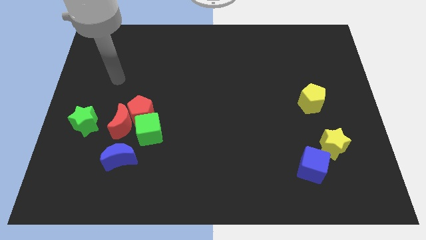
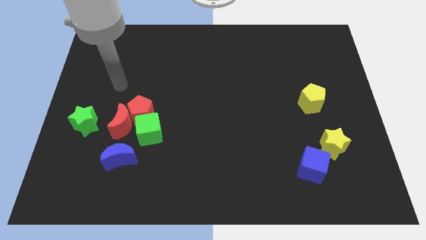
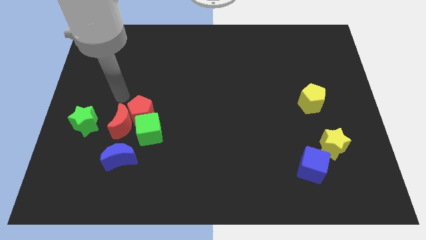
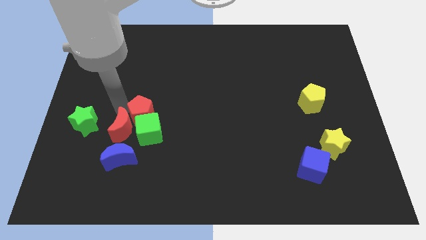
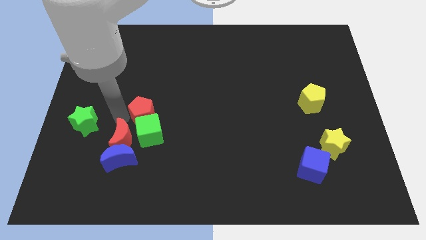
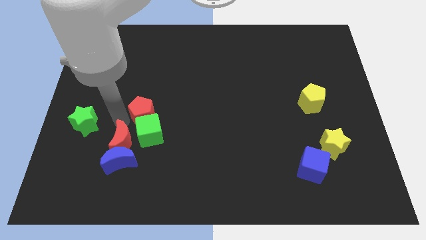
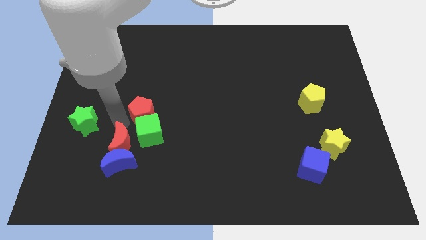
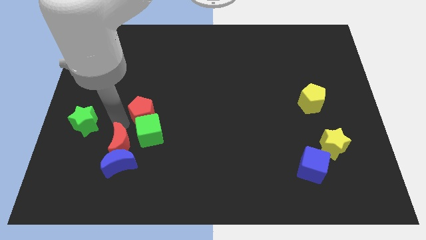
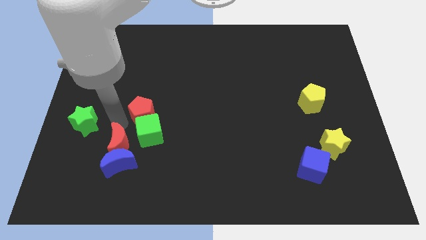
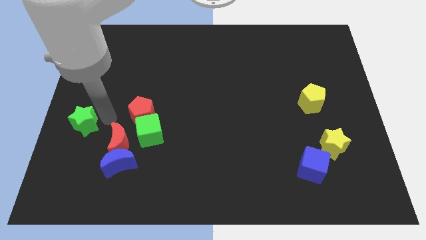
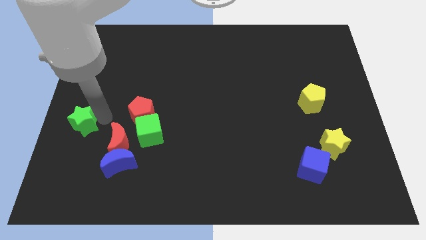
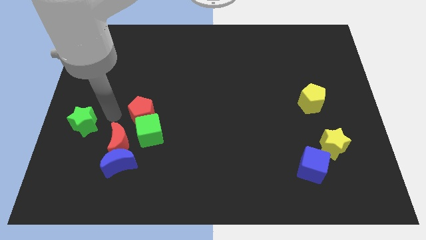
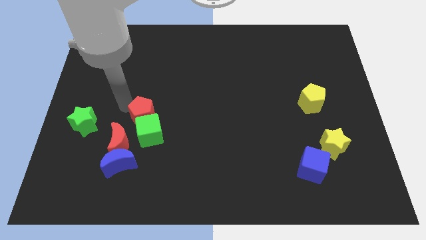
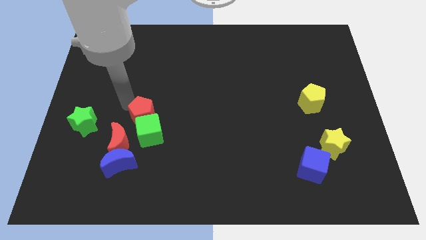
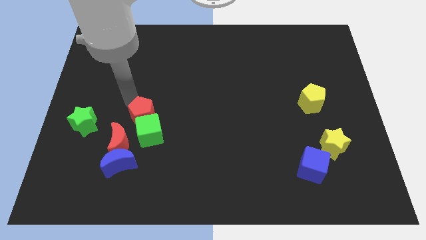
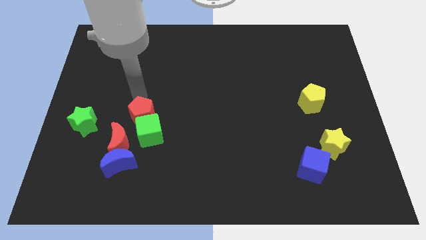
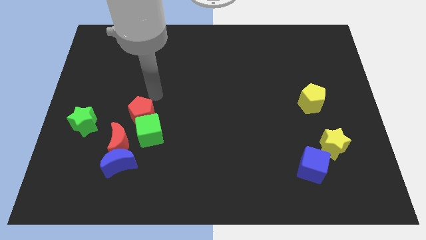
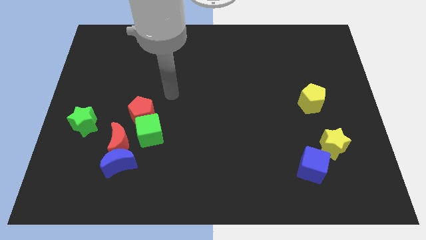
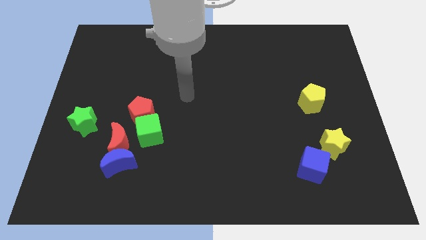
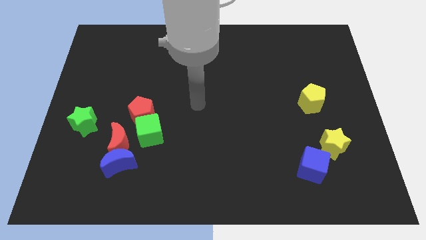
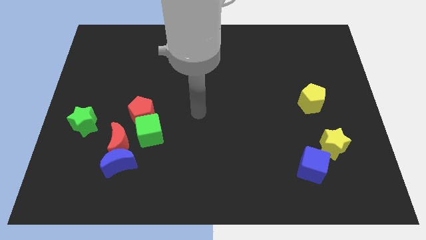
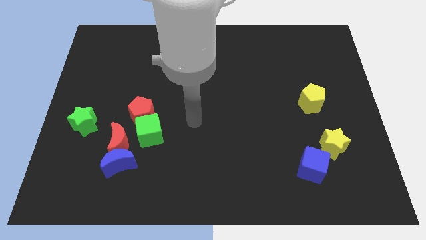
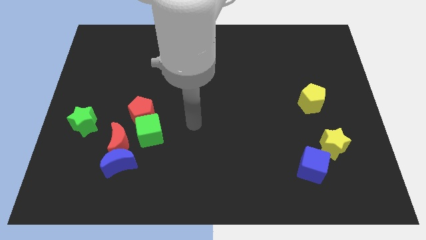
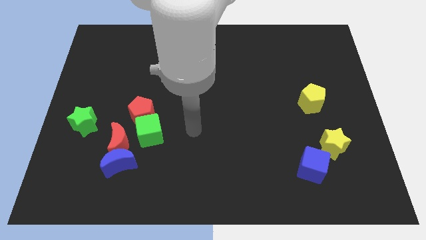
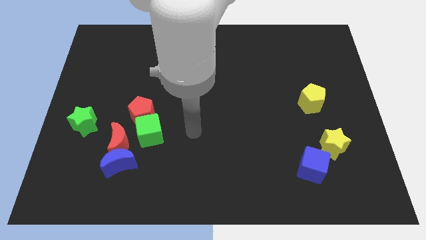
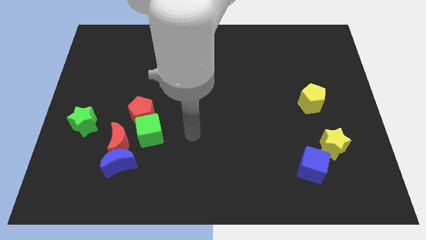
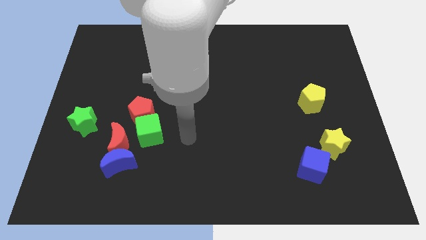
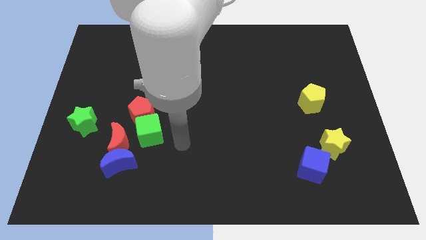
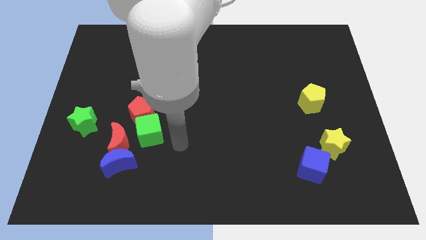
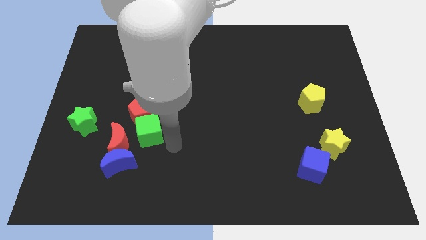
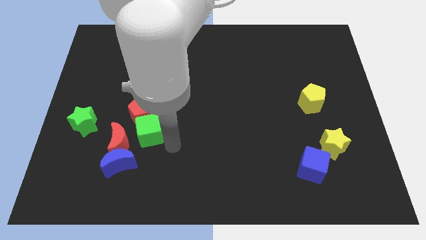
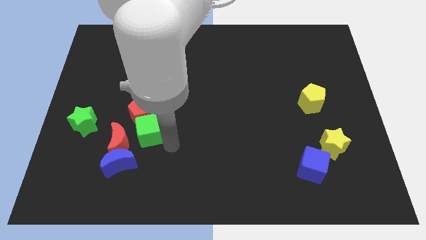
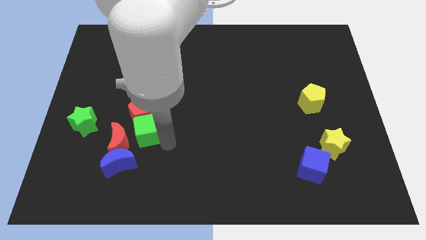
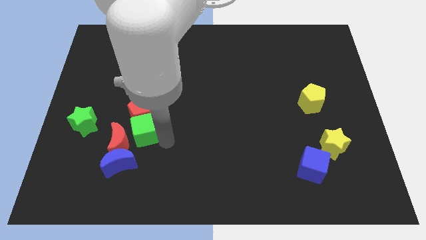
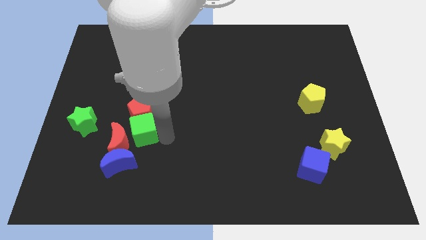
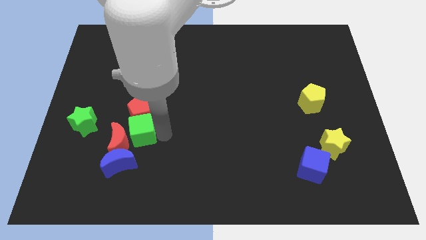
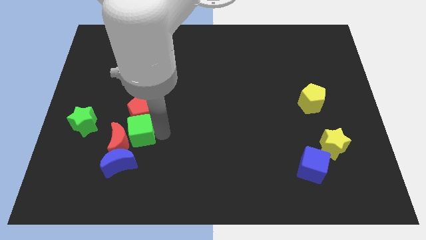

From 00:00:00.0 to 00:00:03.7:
move red moon into the blue moon slightly touch green cube

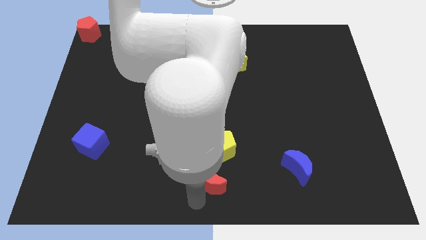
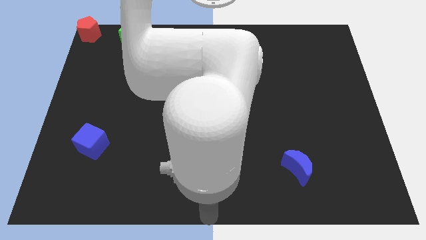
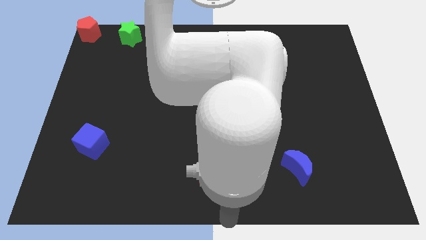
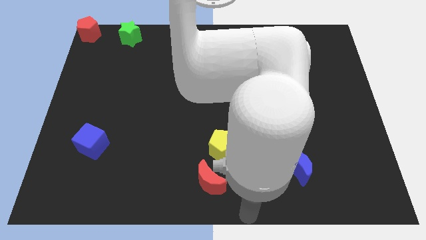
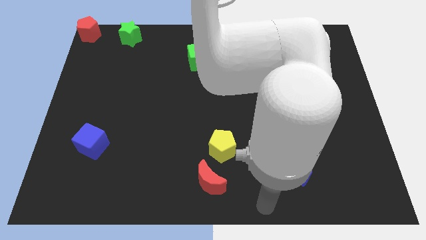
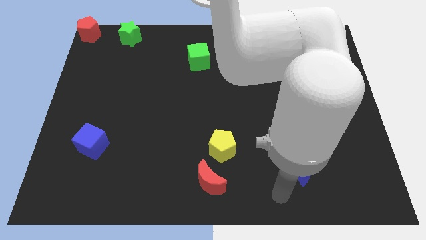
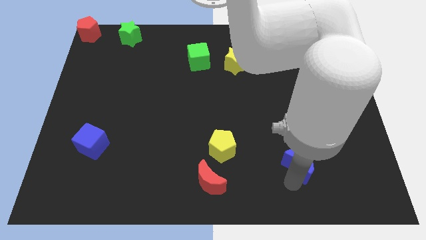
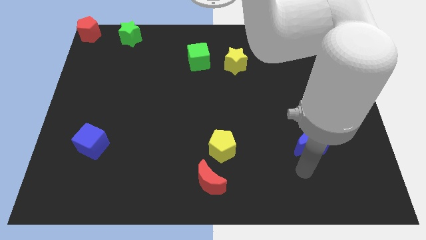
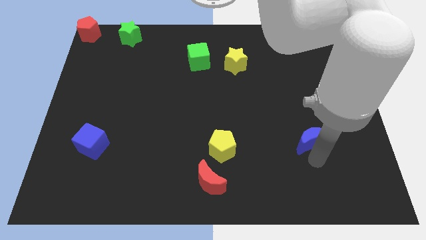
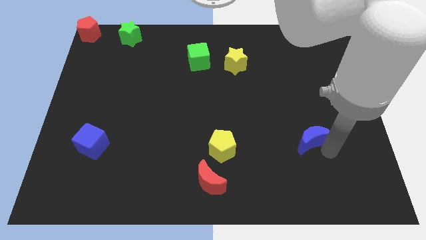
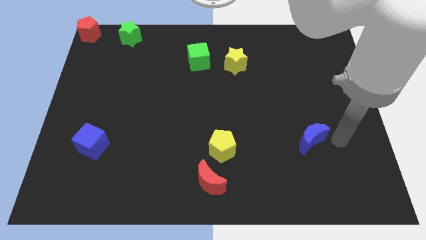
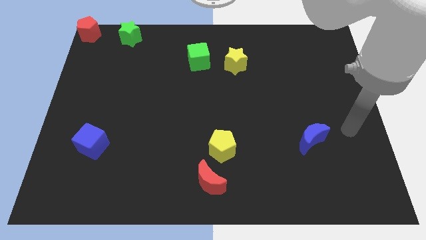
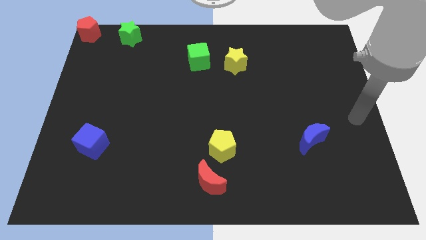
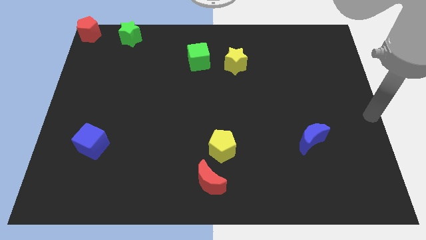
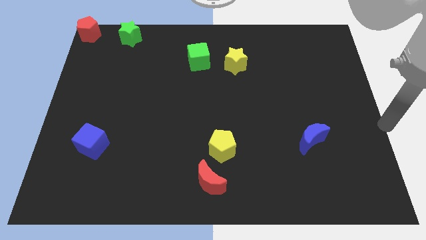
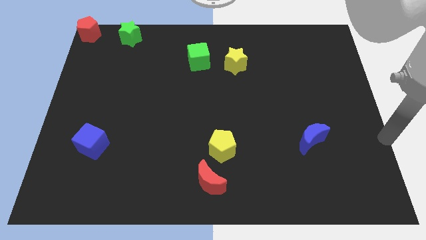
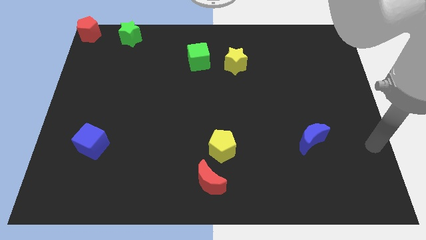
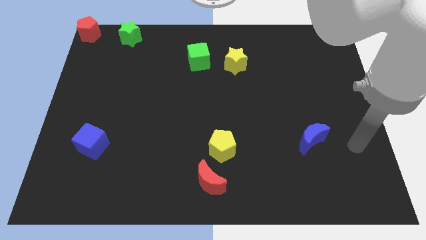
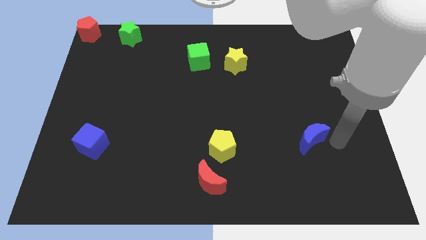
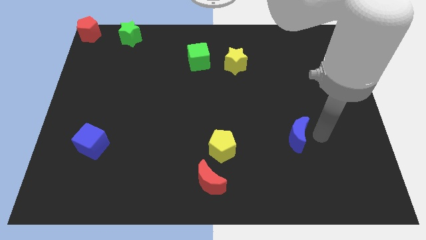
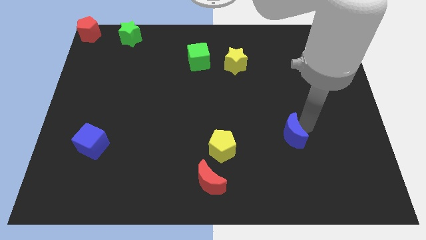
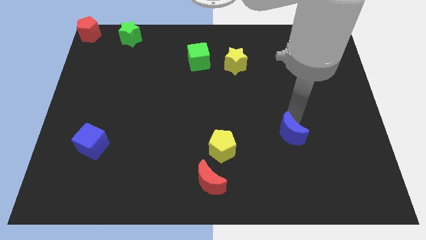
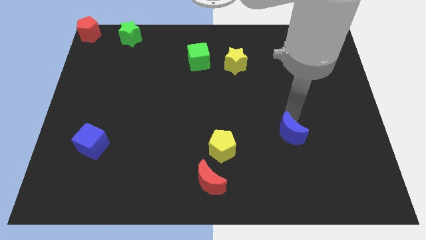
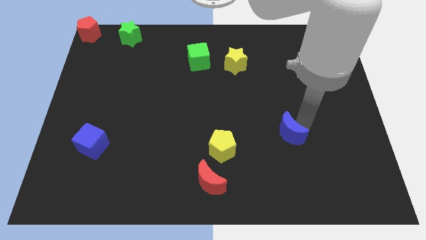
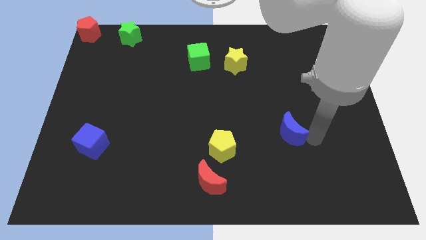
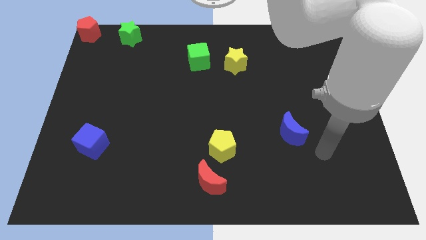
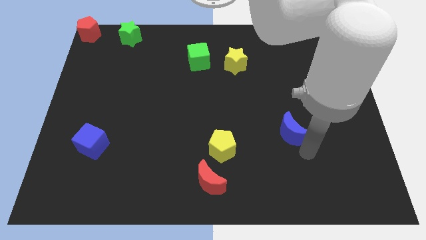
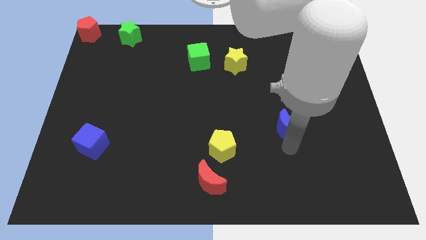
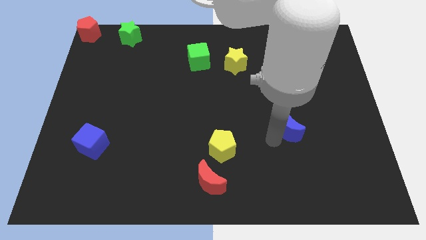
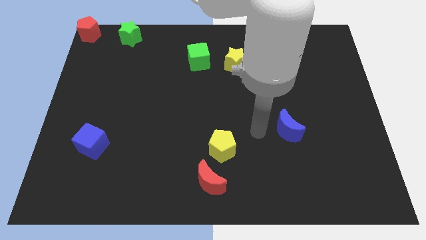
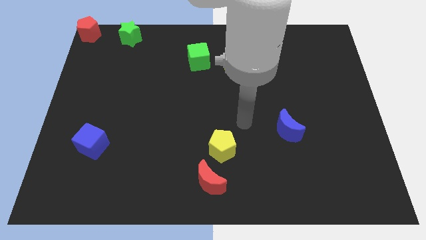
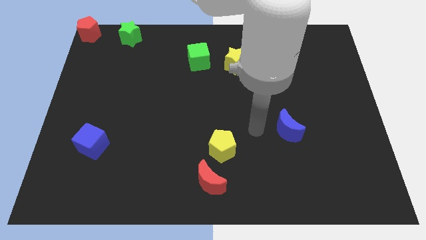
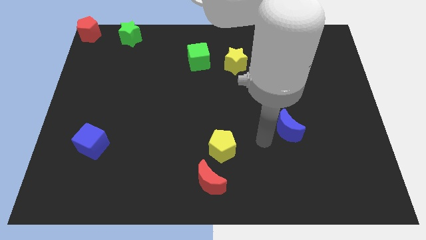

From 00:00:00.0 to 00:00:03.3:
move the blue crescent diagonally top right to the yellow pentagon

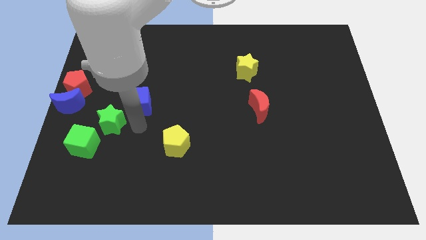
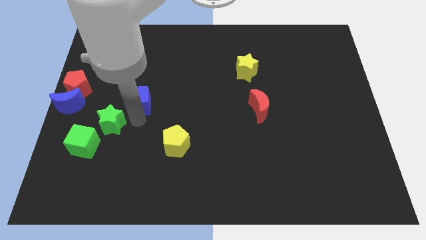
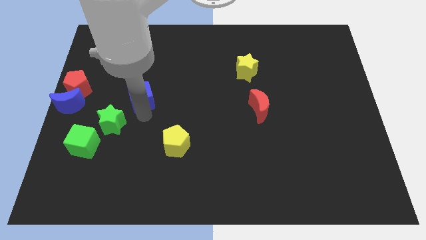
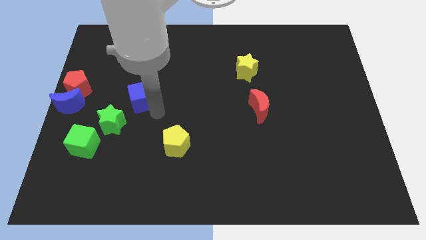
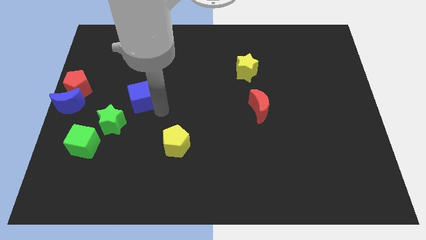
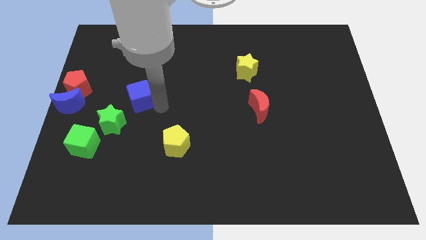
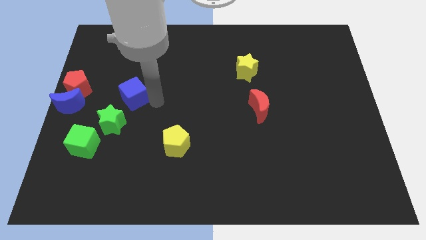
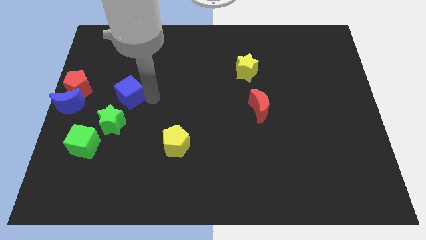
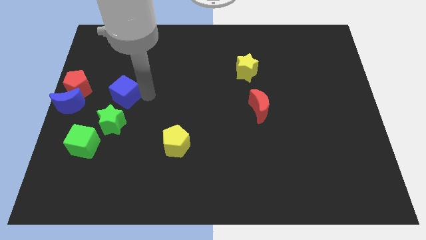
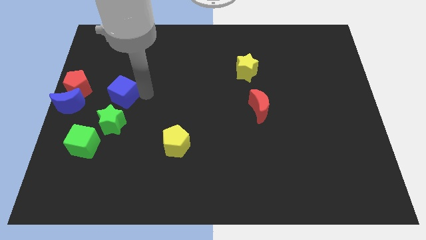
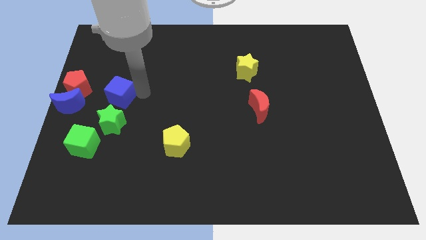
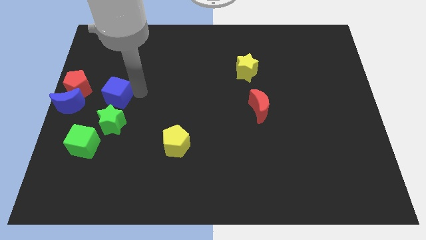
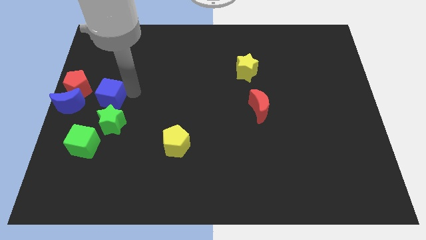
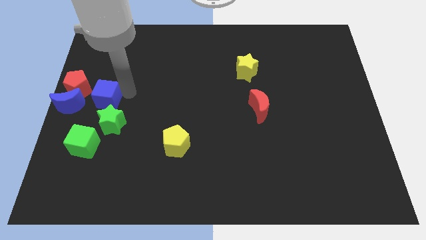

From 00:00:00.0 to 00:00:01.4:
push the blue cube on the top of the green star

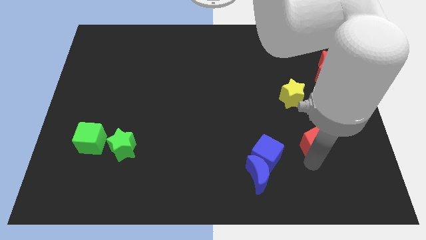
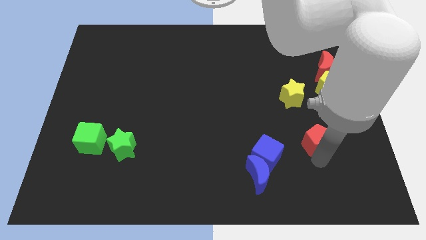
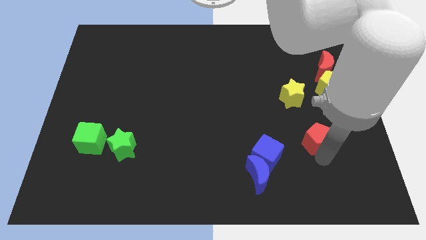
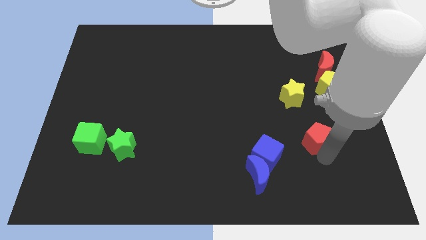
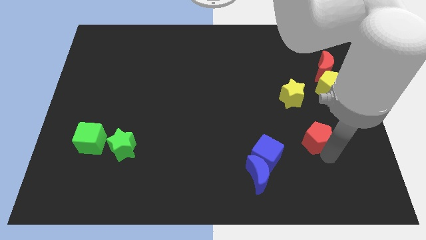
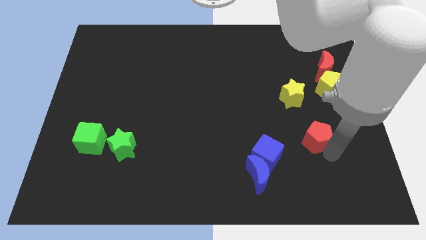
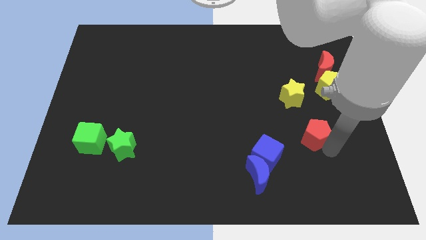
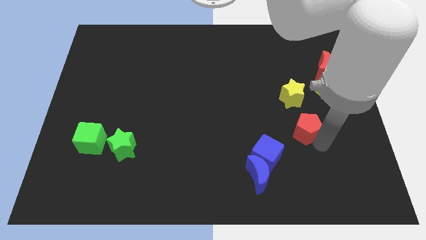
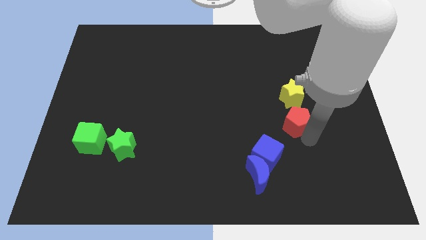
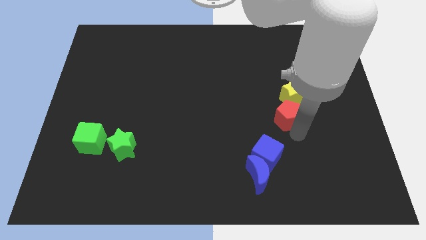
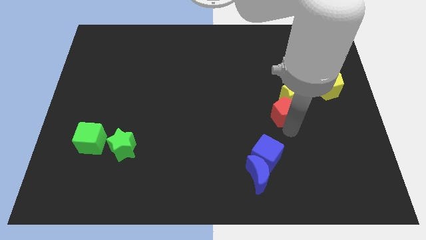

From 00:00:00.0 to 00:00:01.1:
move the red pentagon close to the yellow star
